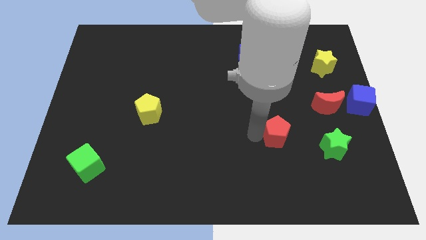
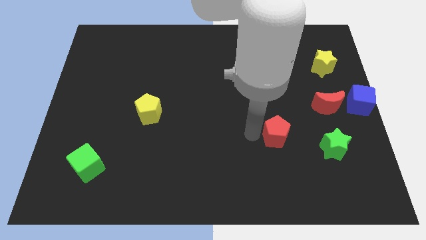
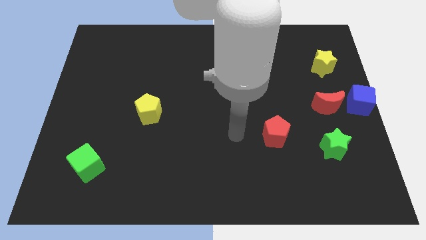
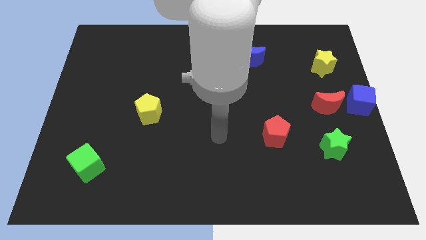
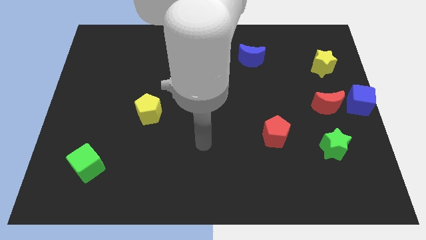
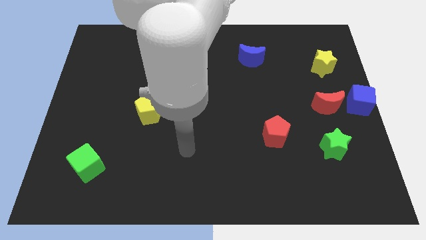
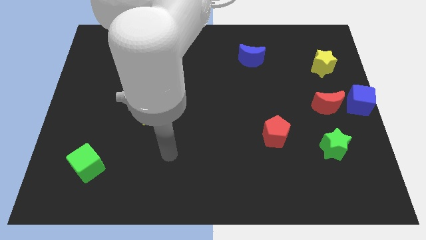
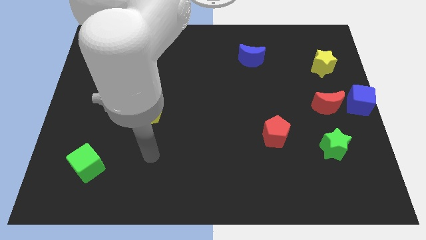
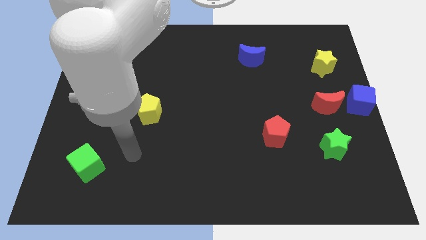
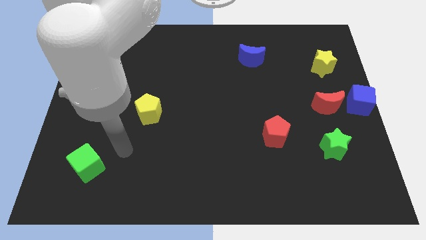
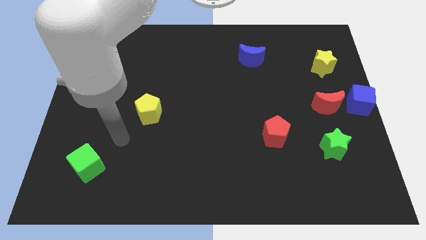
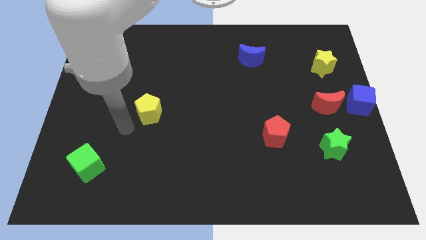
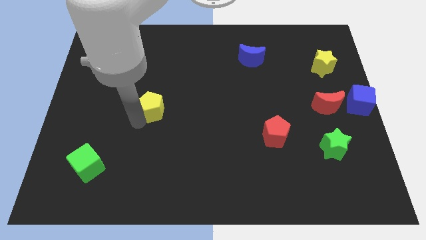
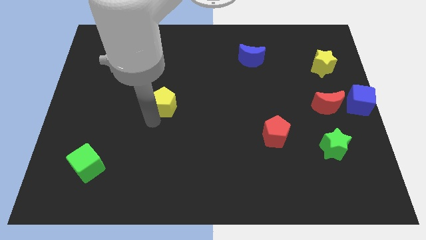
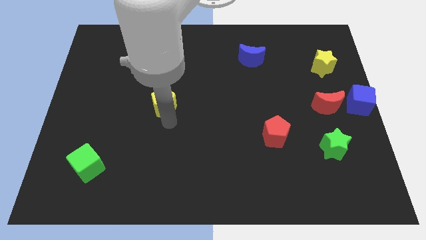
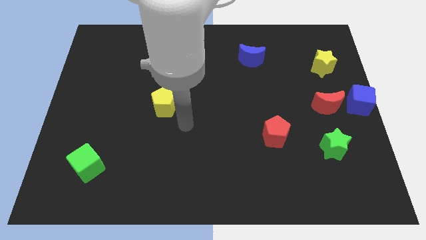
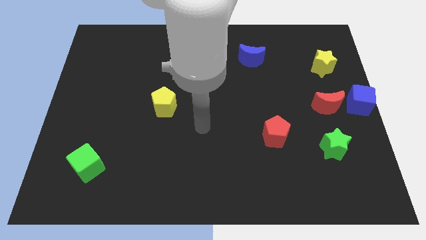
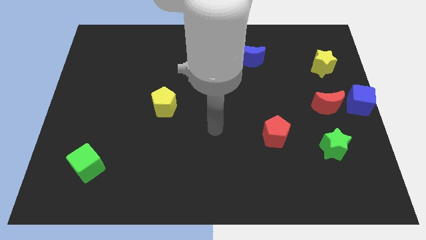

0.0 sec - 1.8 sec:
slightly push the yellow pentagon upwards

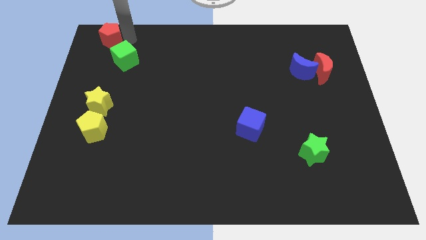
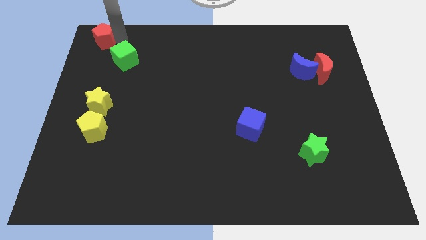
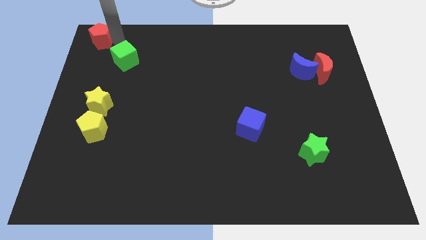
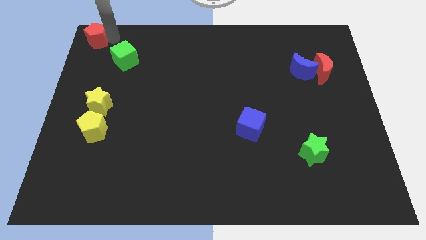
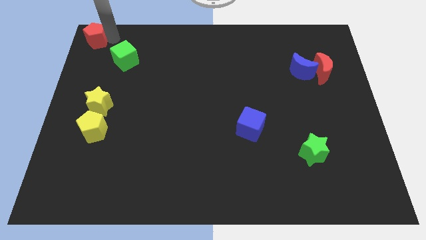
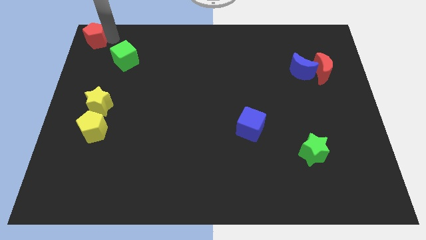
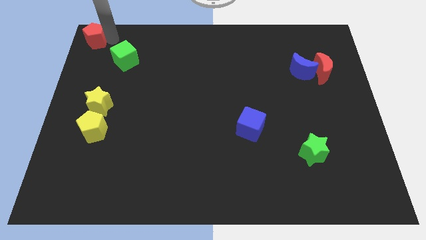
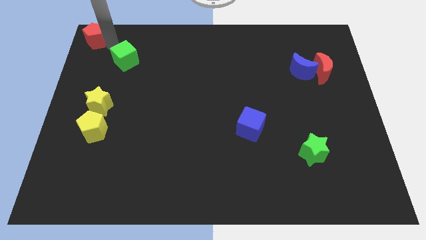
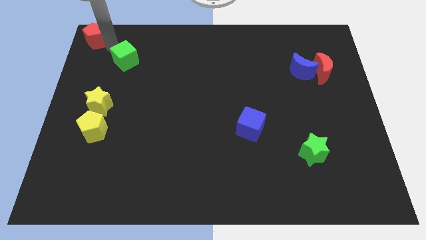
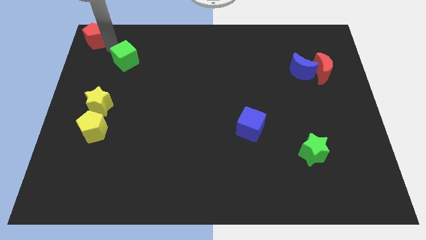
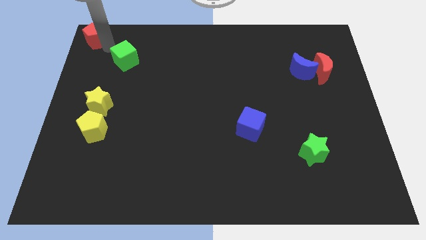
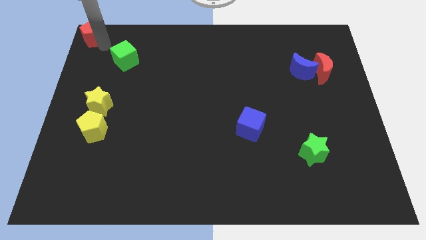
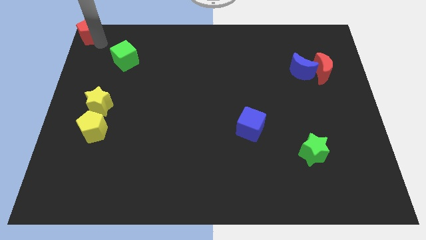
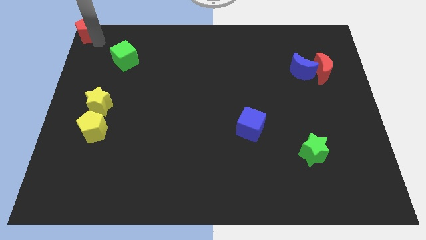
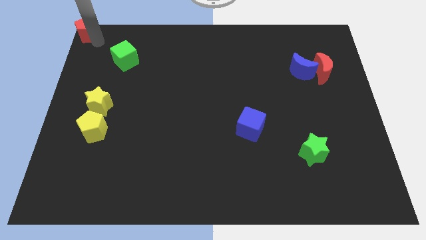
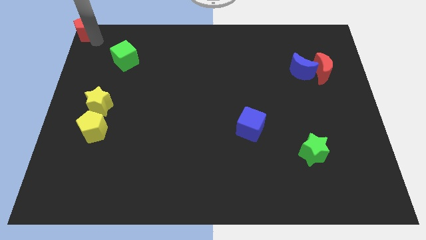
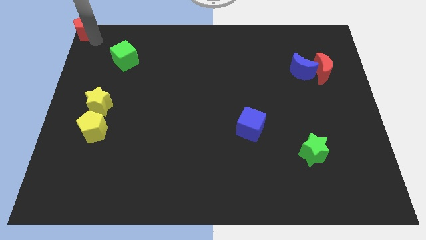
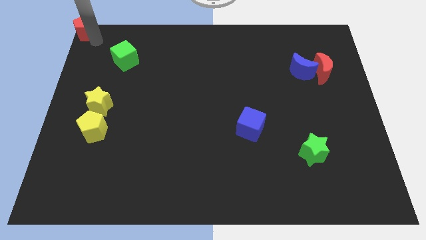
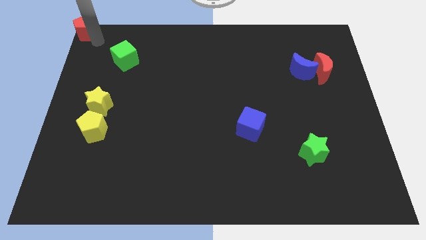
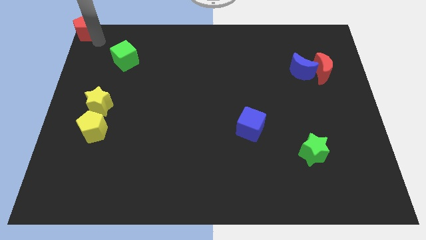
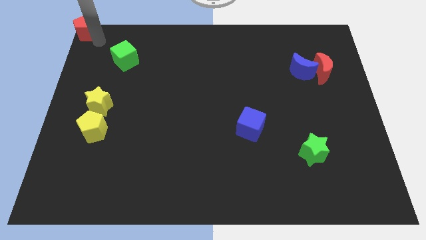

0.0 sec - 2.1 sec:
push the red pentagon to the top left on the board

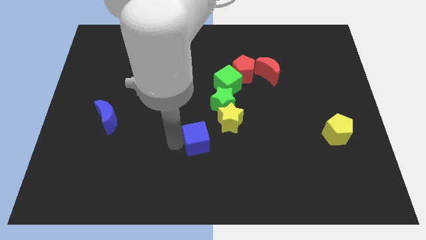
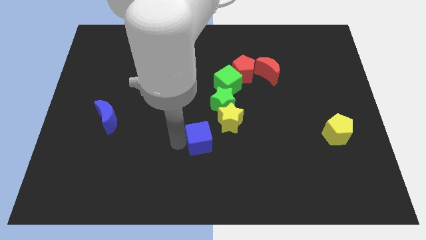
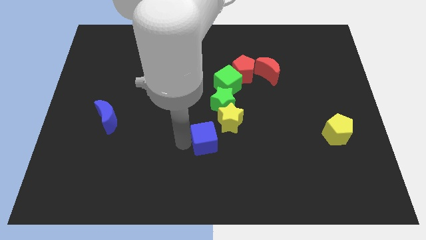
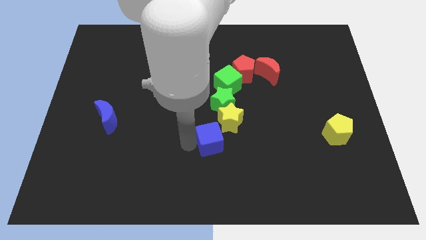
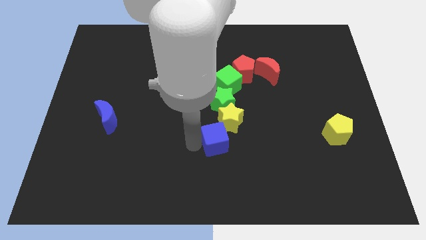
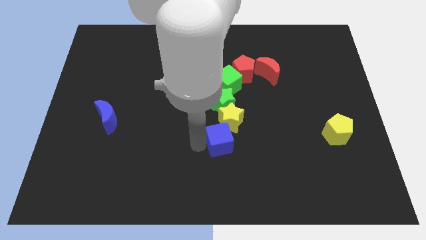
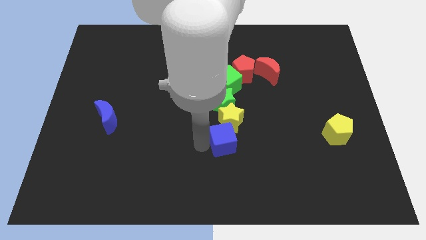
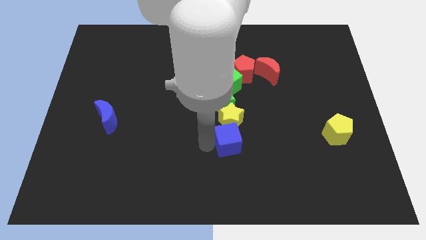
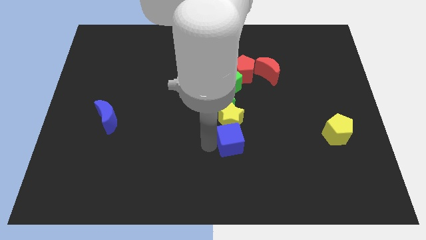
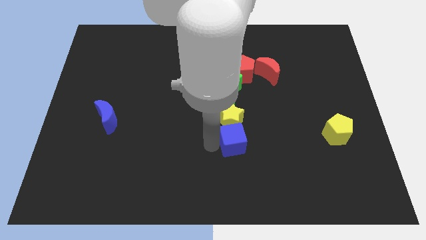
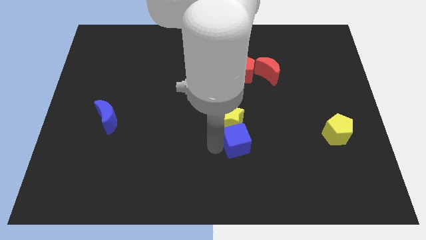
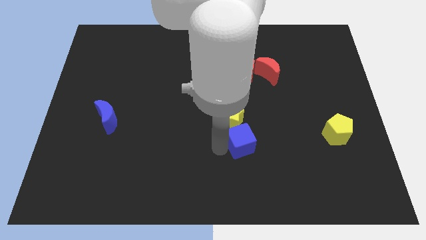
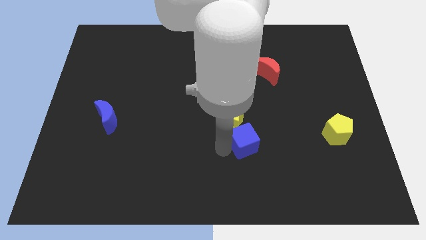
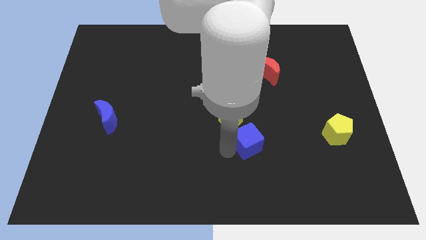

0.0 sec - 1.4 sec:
place the blue cube at the bottom of the yellow star

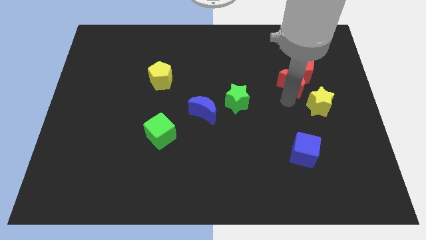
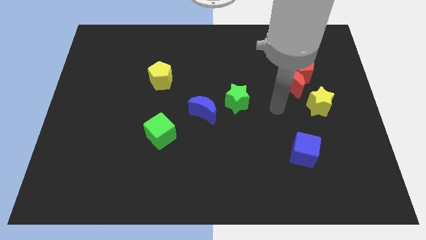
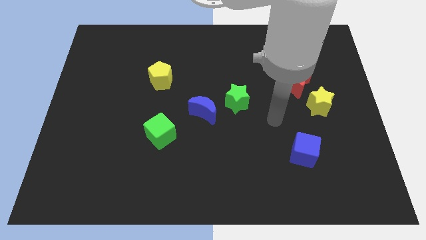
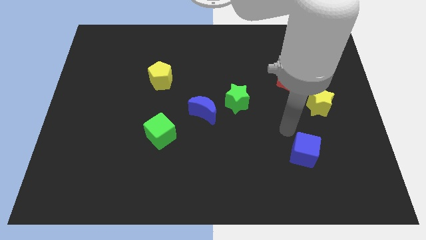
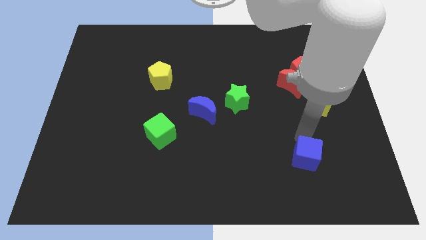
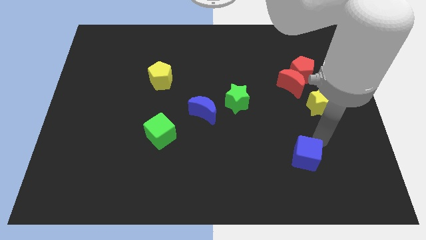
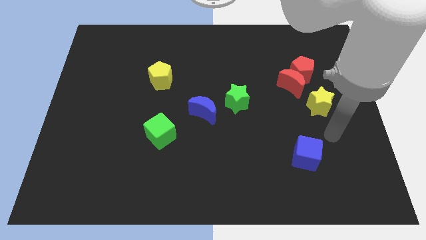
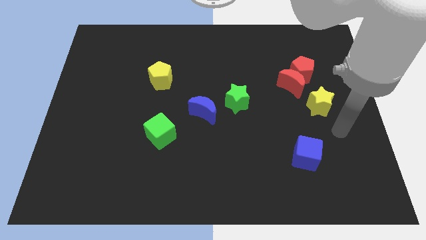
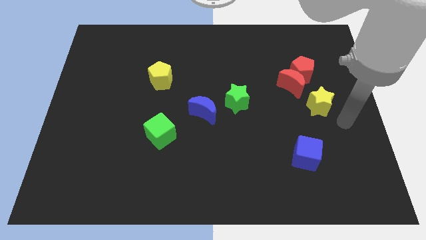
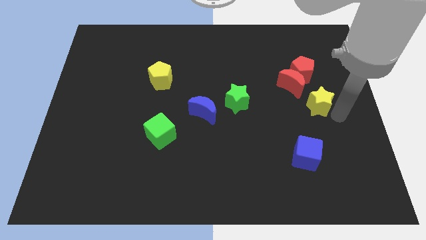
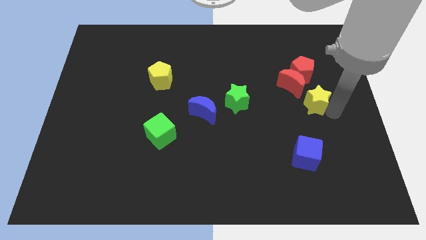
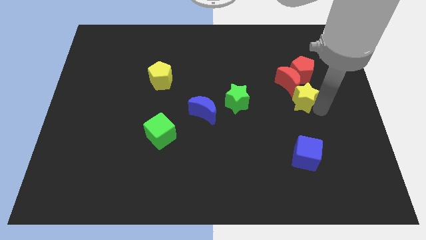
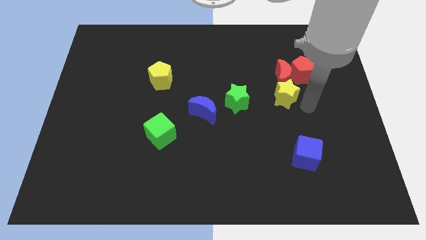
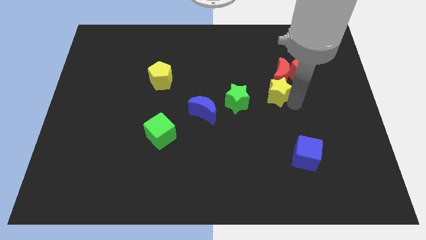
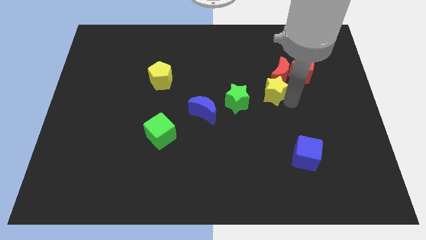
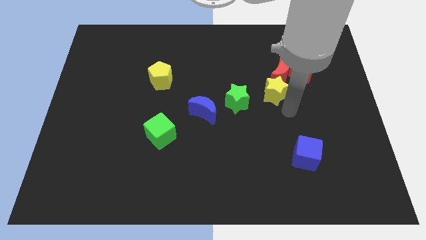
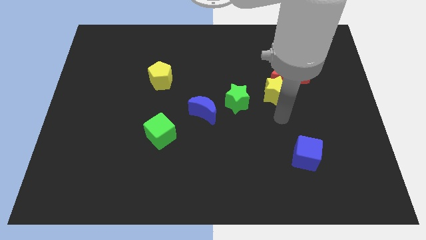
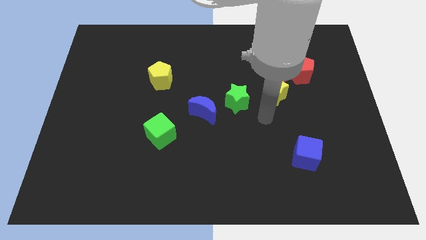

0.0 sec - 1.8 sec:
push the yellow star into the red crescent

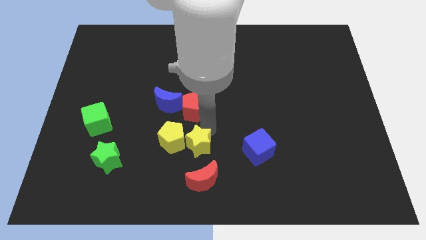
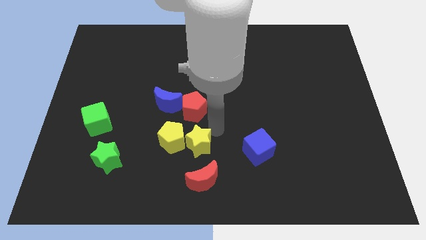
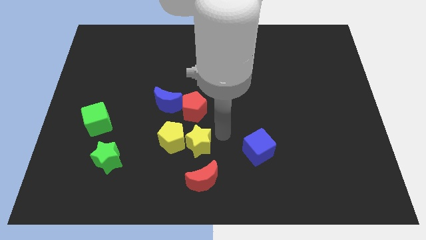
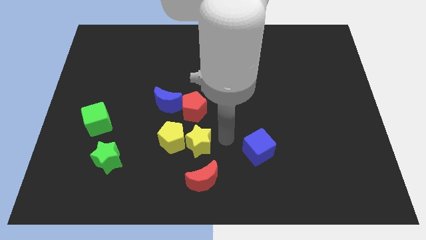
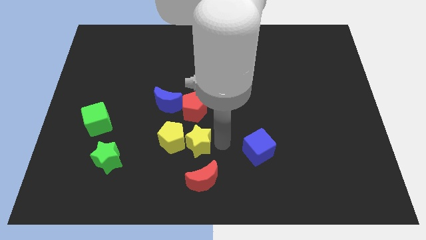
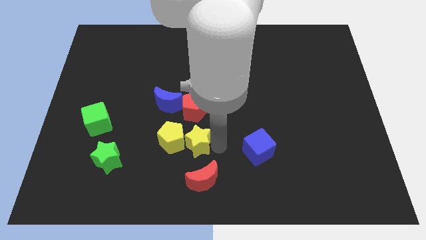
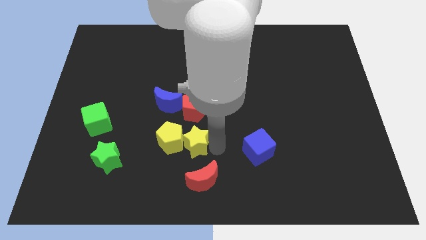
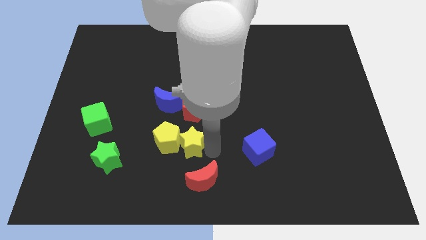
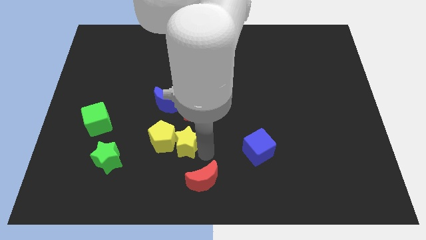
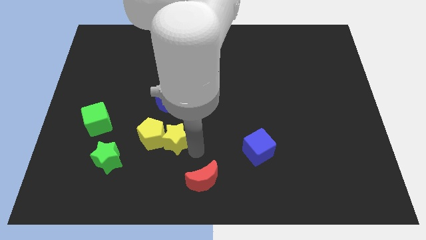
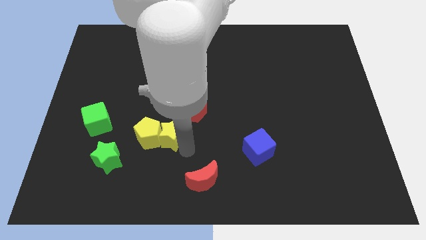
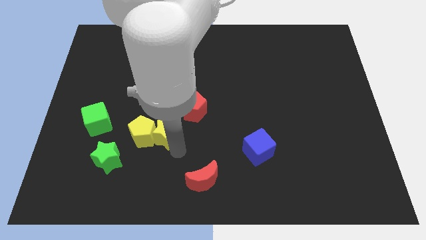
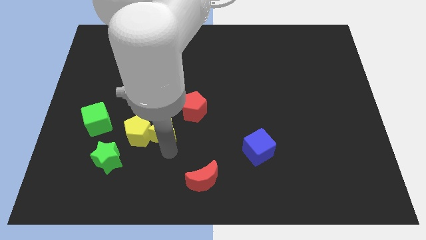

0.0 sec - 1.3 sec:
move the yellow star and yellow pentagon towards the green cube

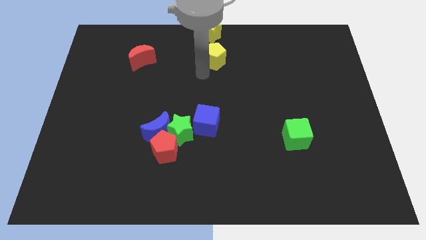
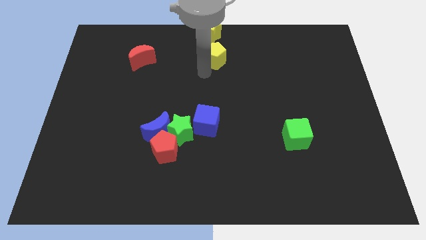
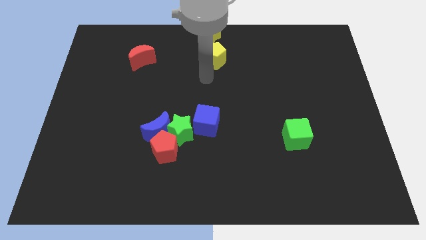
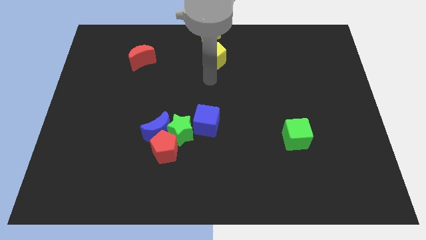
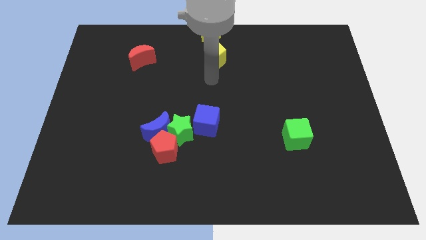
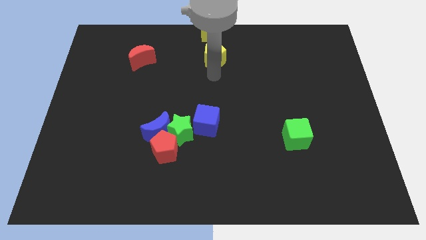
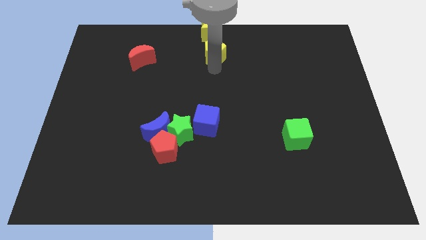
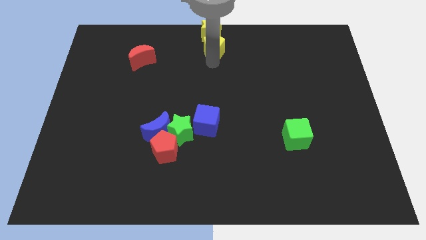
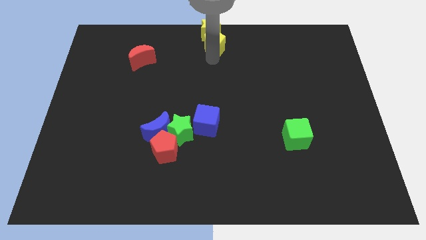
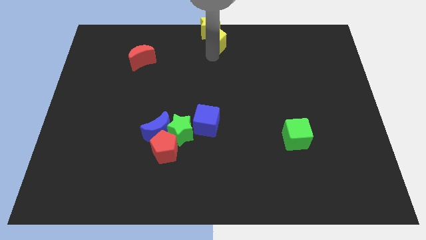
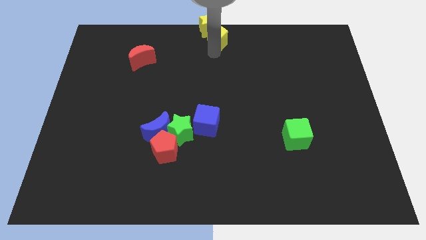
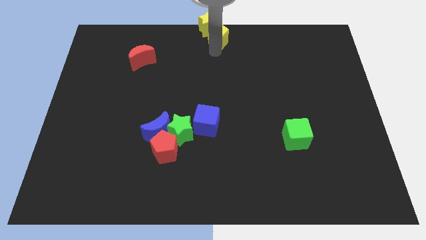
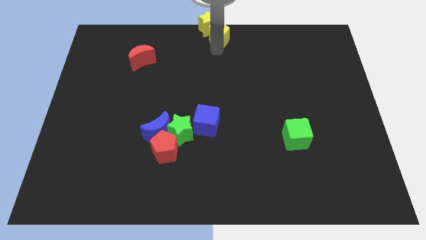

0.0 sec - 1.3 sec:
push the yellow pentagon into yellow star
